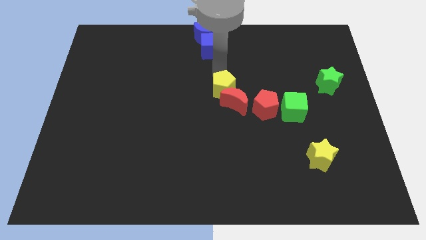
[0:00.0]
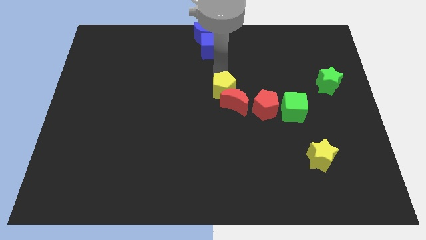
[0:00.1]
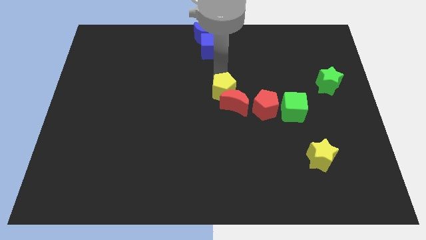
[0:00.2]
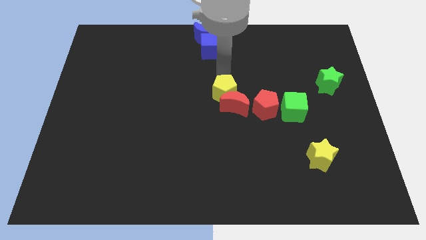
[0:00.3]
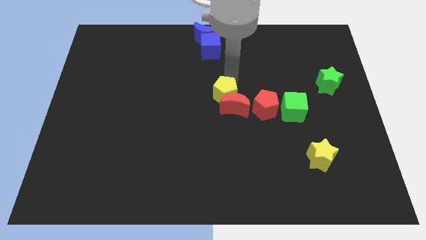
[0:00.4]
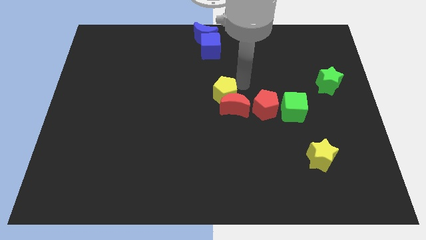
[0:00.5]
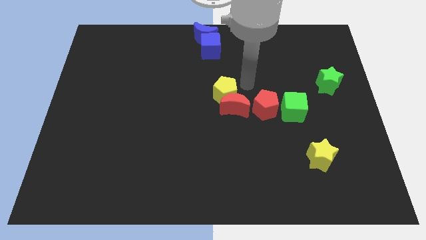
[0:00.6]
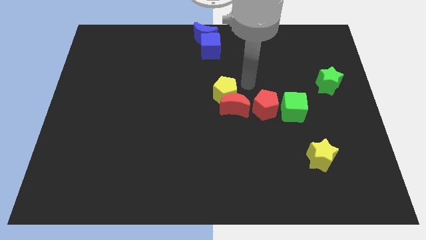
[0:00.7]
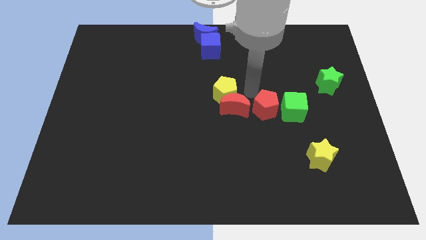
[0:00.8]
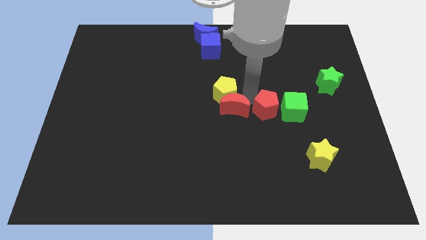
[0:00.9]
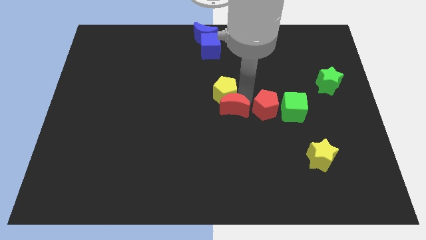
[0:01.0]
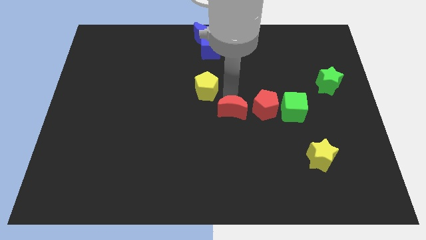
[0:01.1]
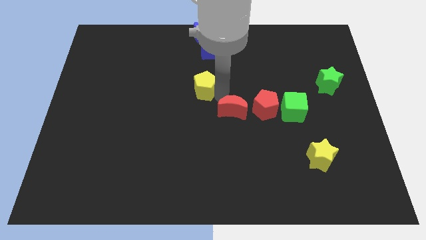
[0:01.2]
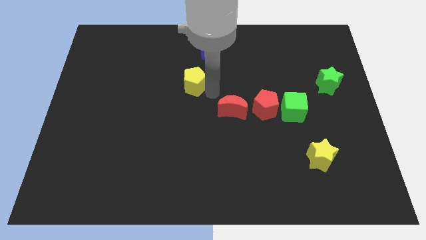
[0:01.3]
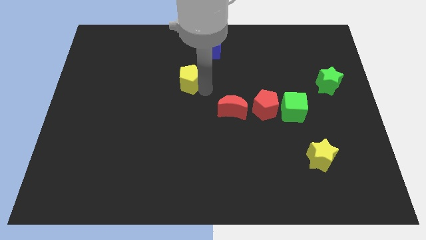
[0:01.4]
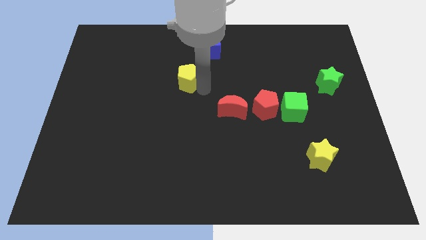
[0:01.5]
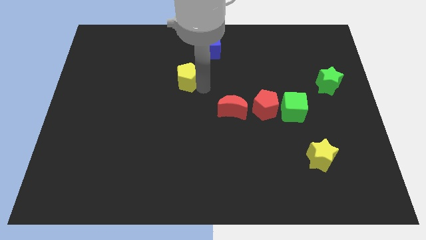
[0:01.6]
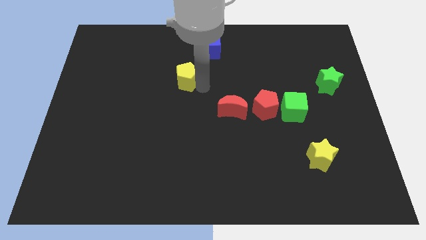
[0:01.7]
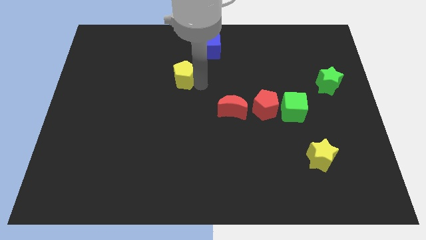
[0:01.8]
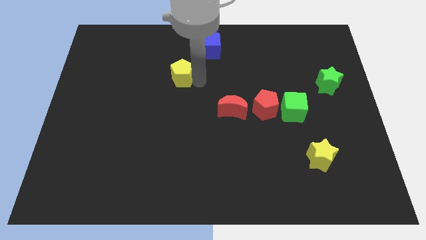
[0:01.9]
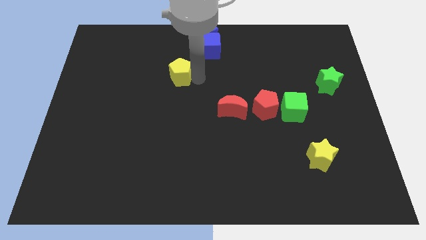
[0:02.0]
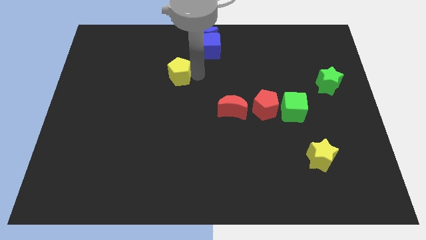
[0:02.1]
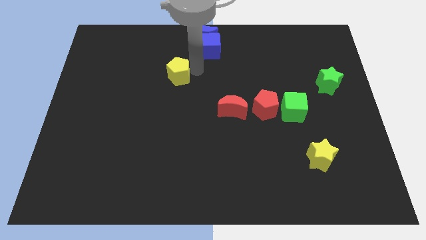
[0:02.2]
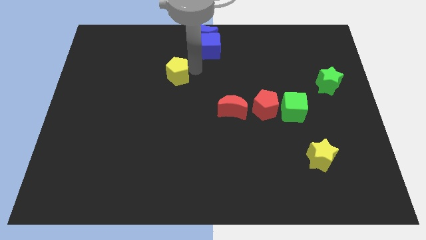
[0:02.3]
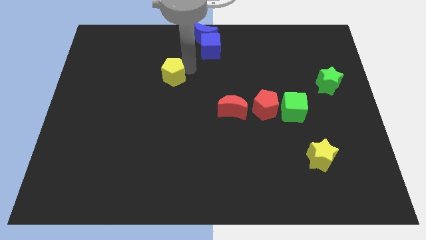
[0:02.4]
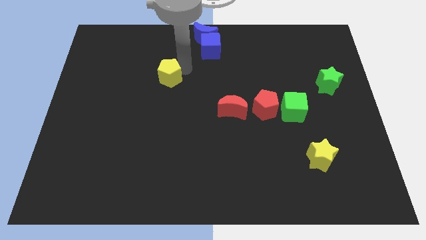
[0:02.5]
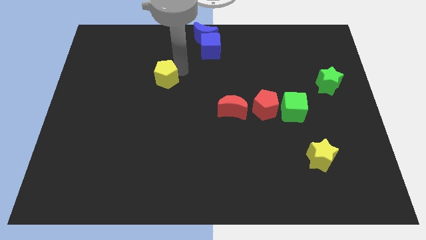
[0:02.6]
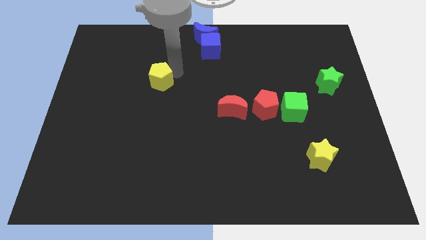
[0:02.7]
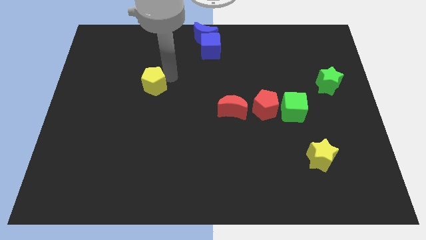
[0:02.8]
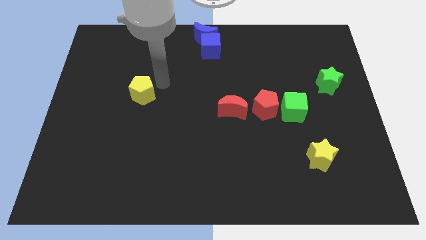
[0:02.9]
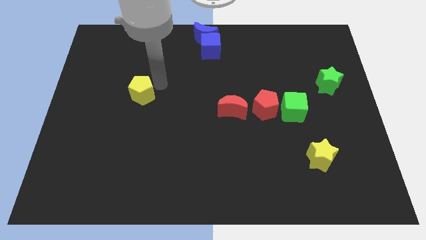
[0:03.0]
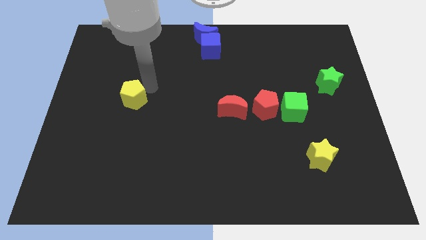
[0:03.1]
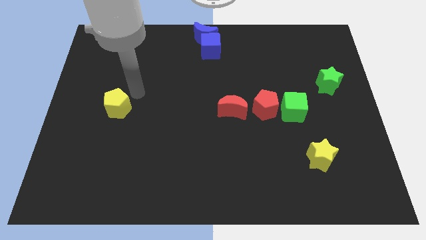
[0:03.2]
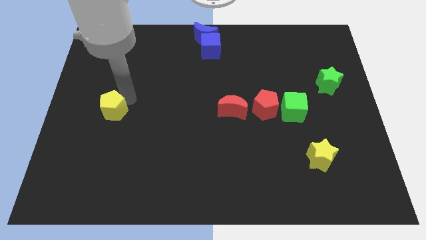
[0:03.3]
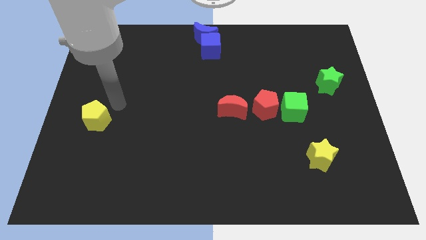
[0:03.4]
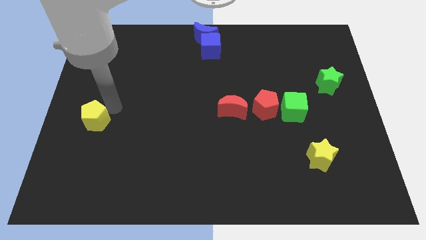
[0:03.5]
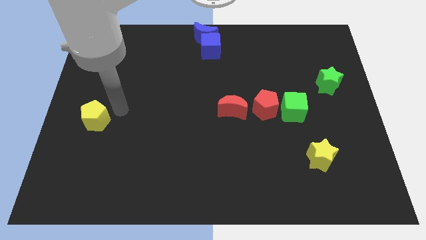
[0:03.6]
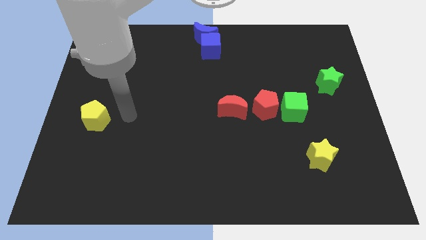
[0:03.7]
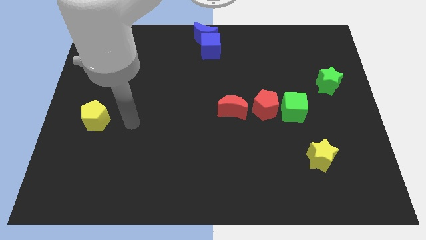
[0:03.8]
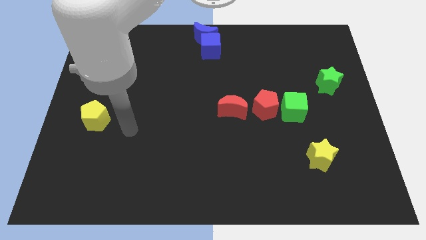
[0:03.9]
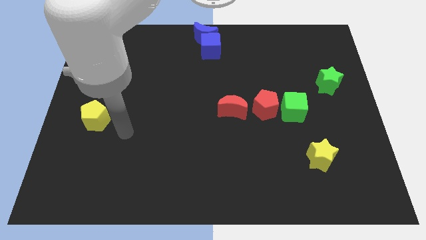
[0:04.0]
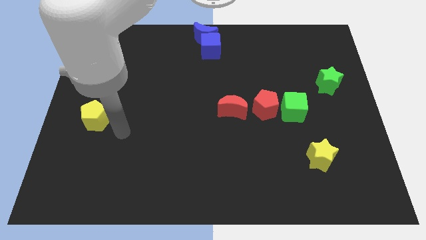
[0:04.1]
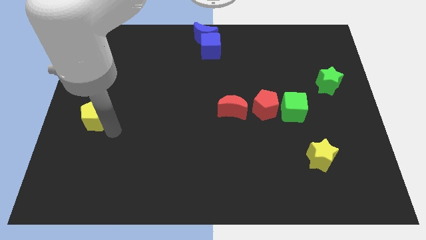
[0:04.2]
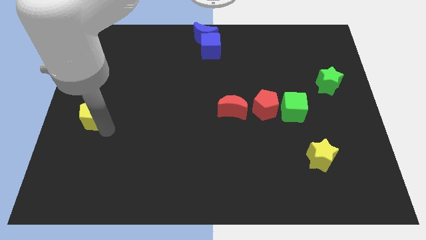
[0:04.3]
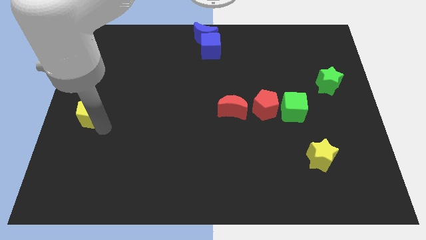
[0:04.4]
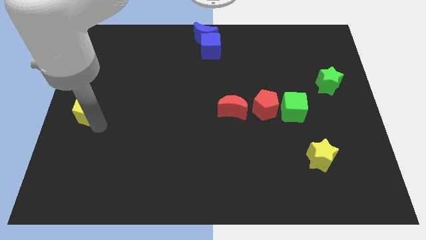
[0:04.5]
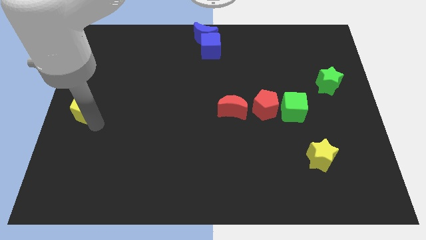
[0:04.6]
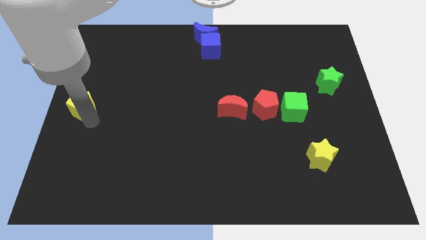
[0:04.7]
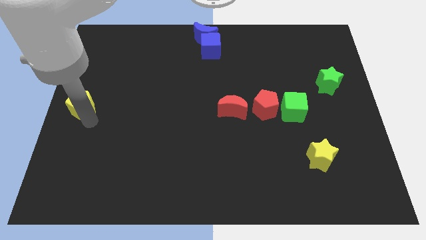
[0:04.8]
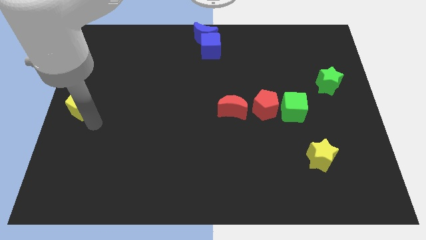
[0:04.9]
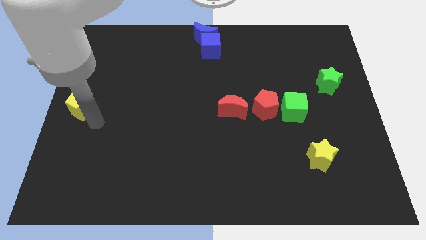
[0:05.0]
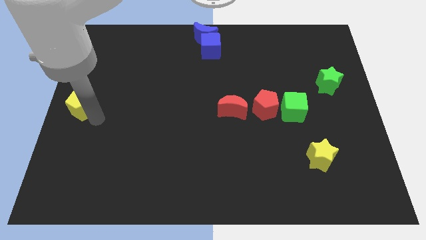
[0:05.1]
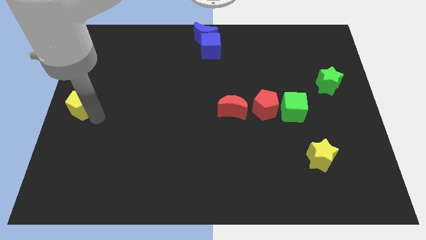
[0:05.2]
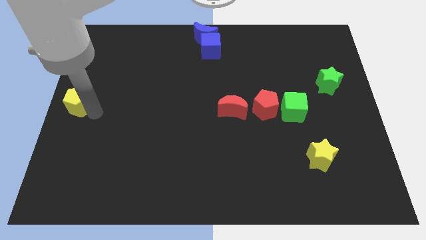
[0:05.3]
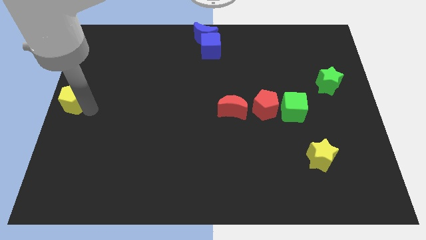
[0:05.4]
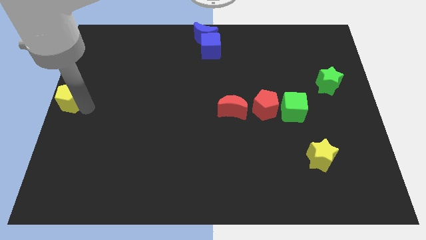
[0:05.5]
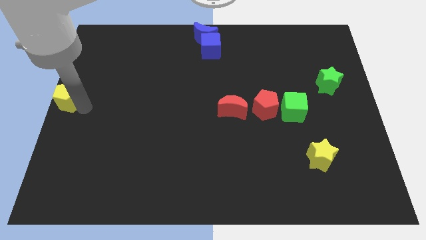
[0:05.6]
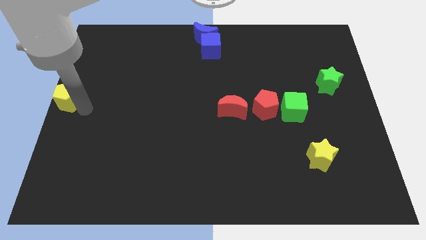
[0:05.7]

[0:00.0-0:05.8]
push the yellow pentagon at the center left

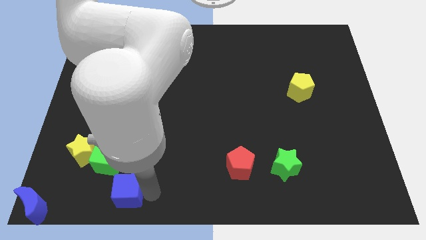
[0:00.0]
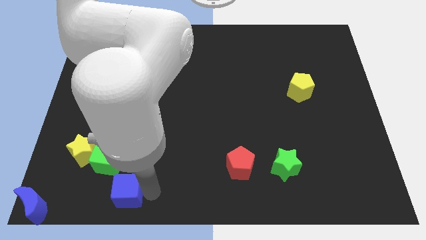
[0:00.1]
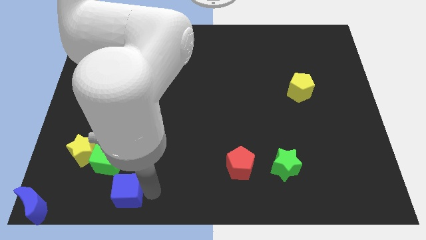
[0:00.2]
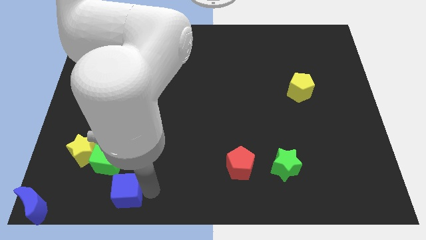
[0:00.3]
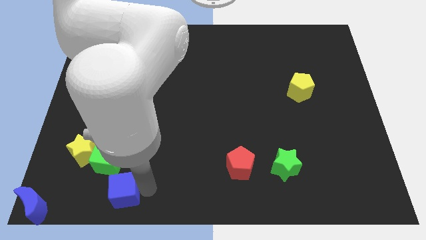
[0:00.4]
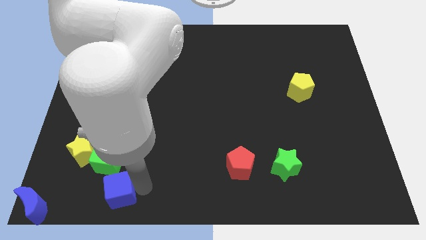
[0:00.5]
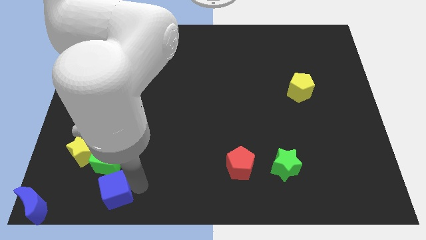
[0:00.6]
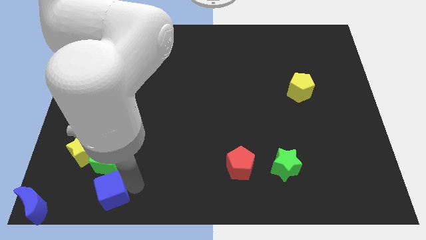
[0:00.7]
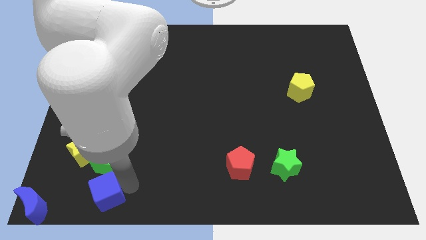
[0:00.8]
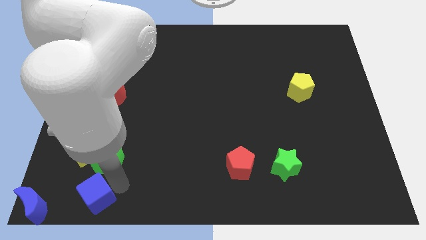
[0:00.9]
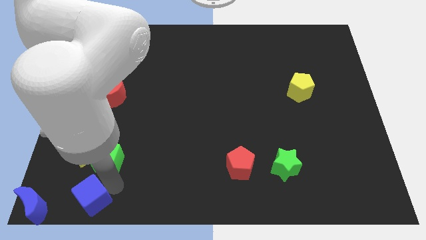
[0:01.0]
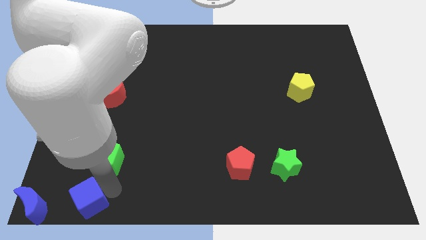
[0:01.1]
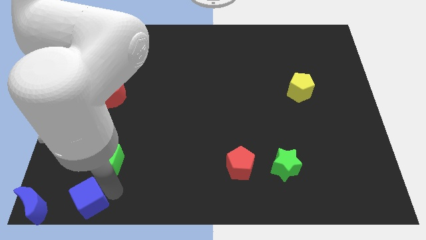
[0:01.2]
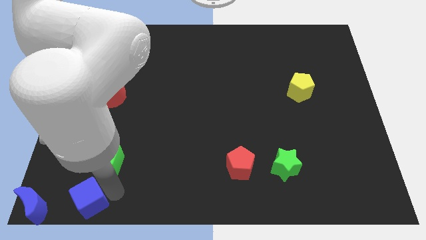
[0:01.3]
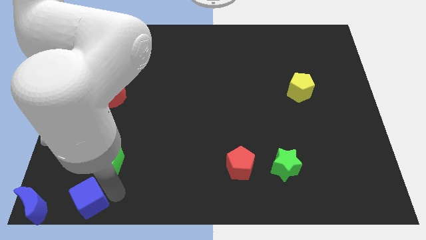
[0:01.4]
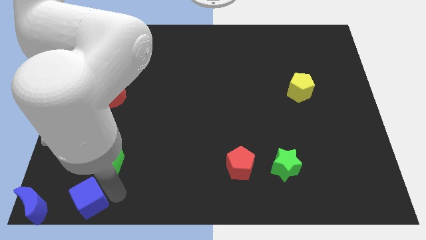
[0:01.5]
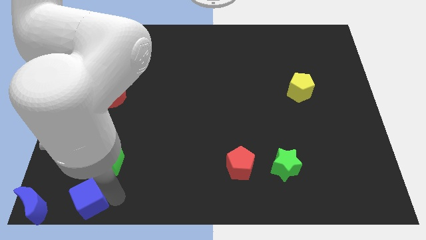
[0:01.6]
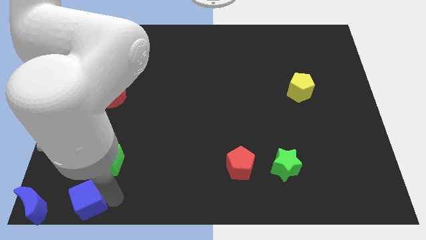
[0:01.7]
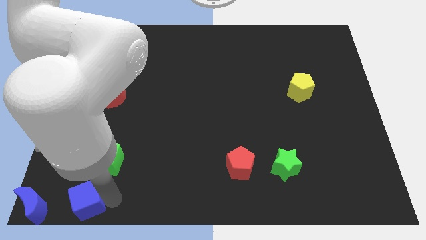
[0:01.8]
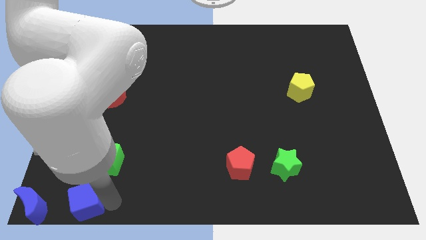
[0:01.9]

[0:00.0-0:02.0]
push the blue cube towards the bottom left side of the board

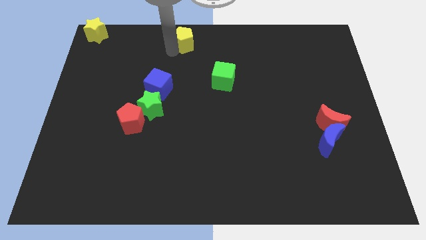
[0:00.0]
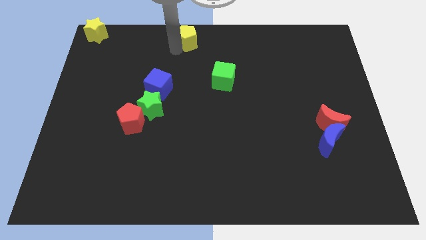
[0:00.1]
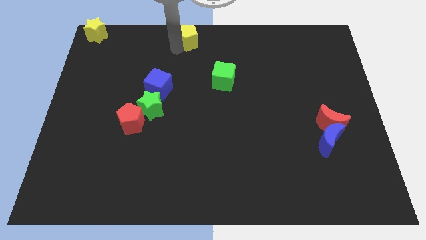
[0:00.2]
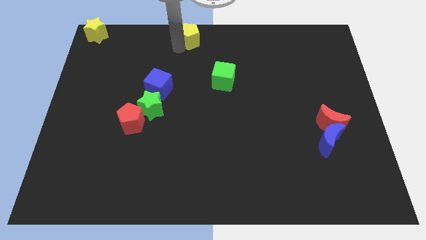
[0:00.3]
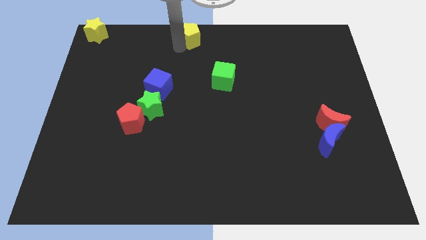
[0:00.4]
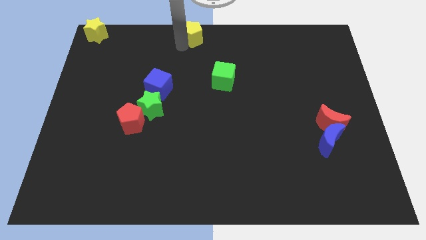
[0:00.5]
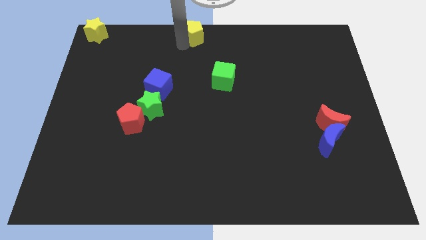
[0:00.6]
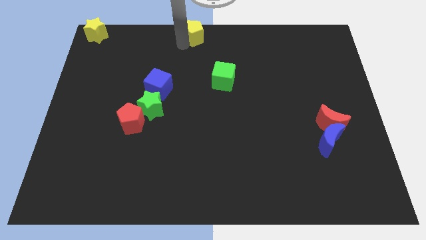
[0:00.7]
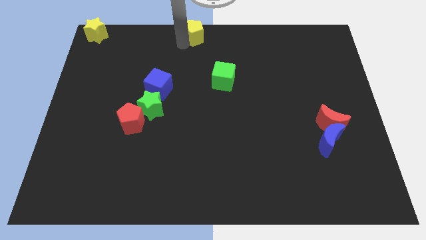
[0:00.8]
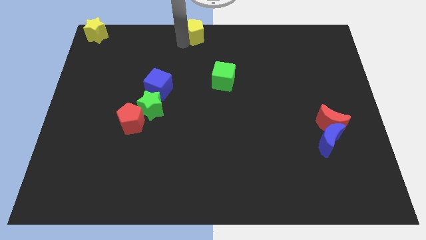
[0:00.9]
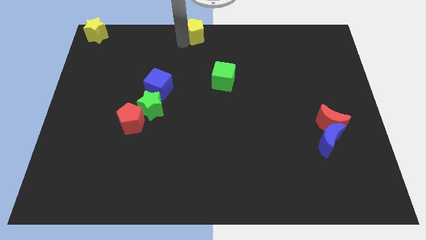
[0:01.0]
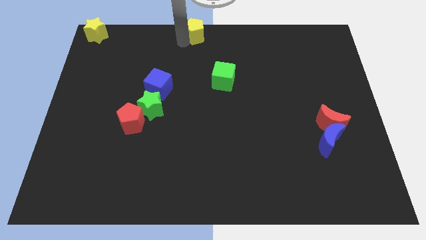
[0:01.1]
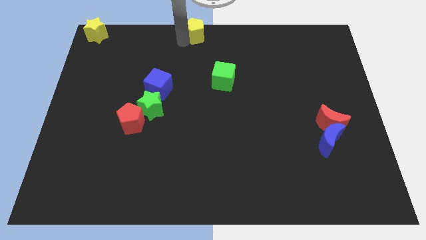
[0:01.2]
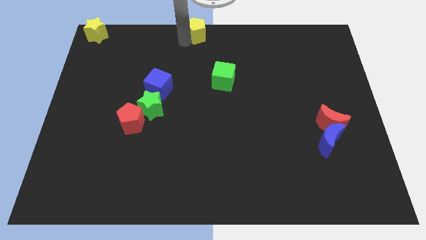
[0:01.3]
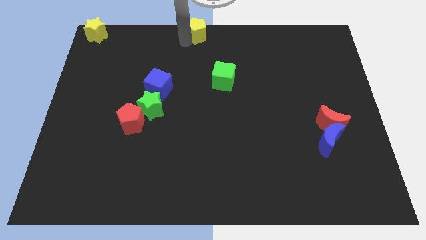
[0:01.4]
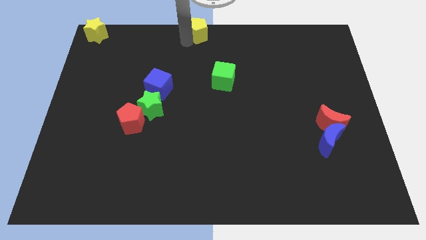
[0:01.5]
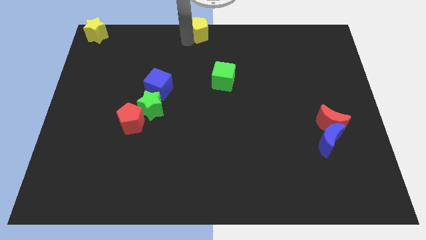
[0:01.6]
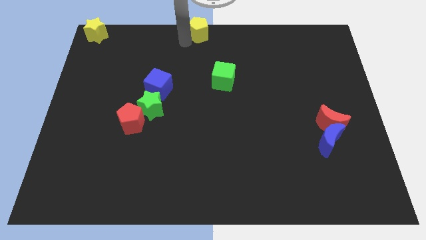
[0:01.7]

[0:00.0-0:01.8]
place yellow pentagon to the top center of the board
